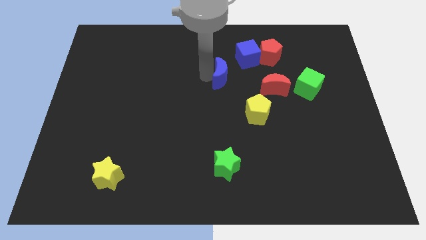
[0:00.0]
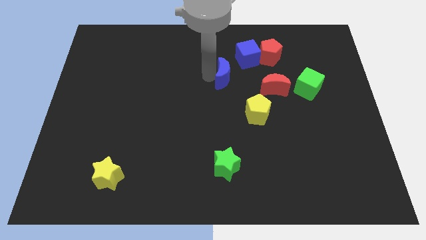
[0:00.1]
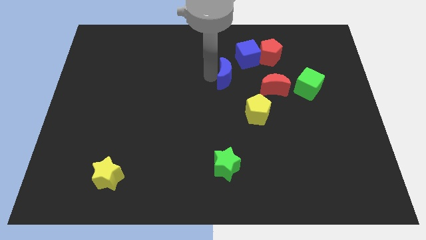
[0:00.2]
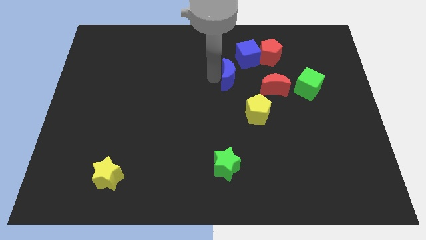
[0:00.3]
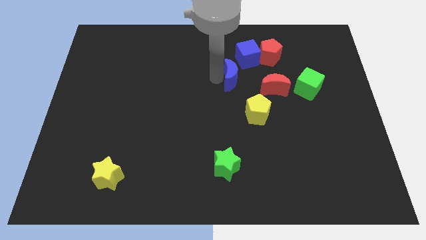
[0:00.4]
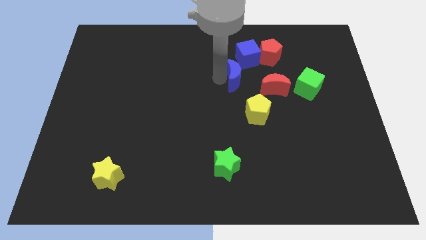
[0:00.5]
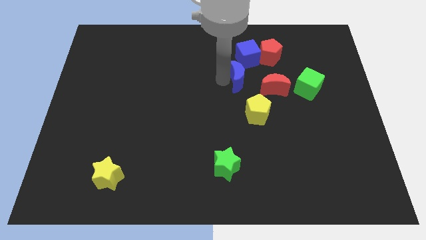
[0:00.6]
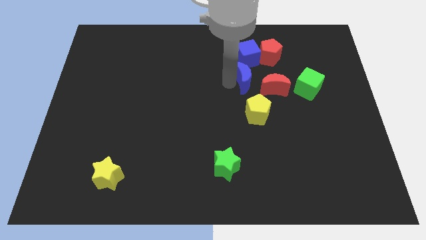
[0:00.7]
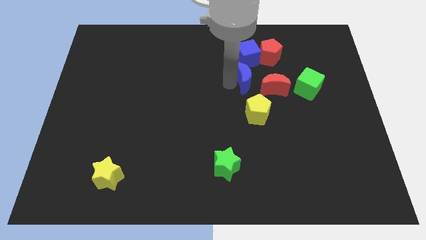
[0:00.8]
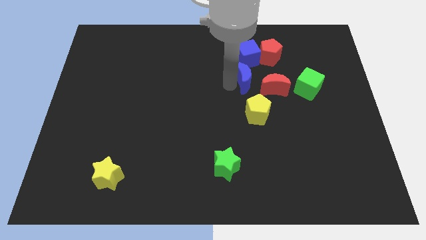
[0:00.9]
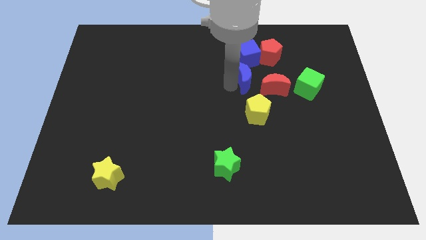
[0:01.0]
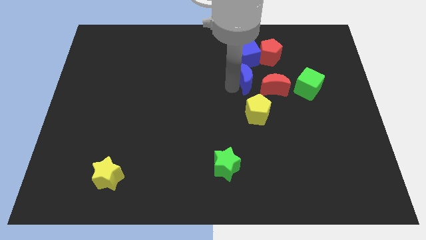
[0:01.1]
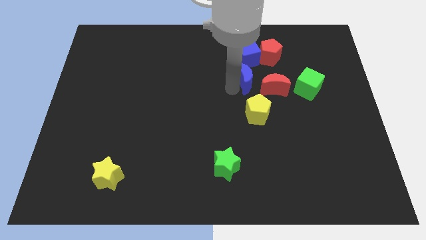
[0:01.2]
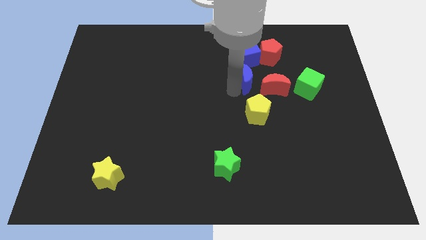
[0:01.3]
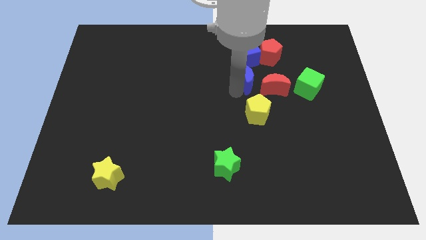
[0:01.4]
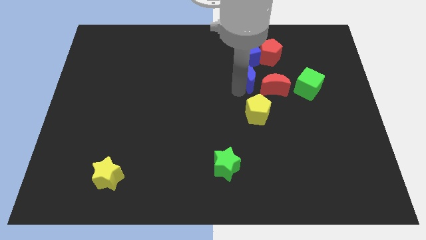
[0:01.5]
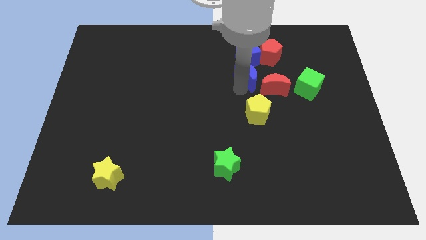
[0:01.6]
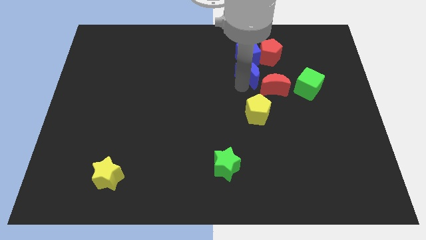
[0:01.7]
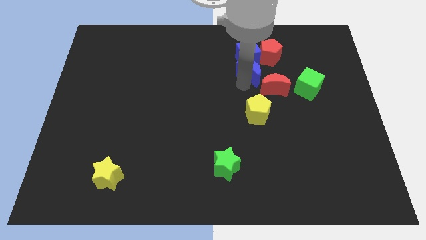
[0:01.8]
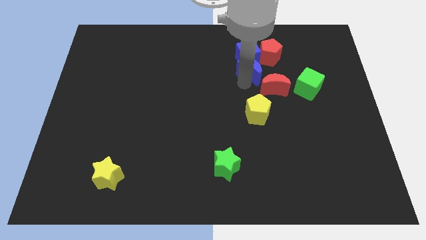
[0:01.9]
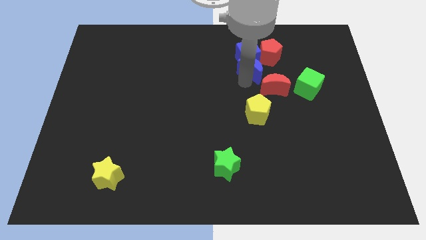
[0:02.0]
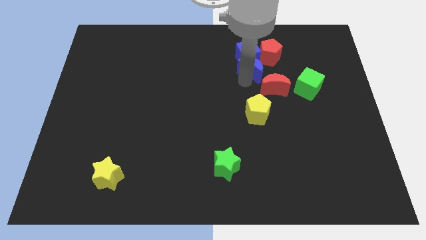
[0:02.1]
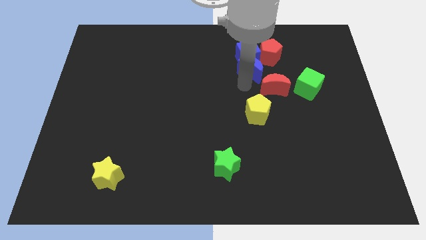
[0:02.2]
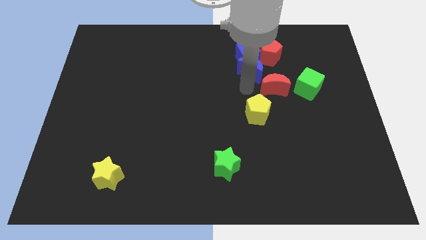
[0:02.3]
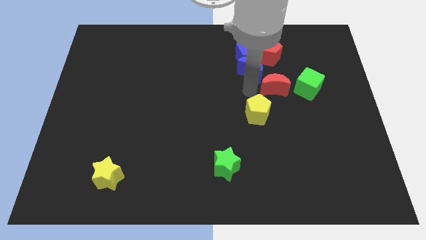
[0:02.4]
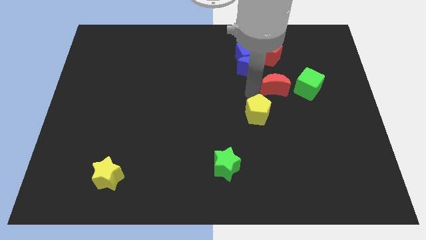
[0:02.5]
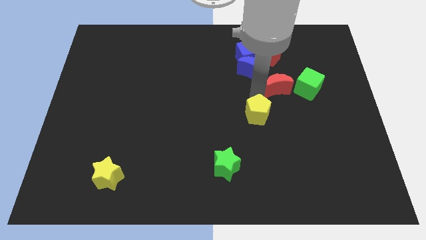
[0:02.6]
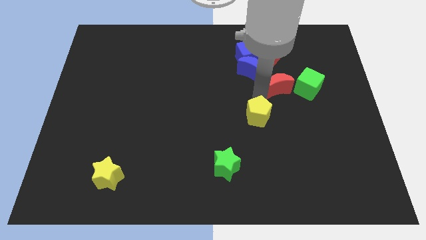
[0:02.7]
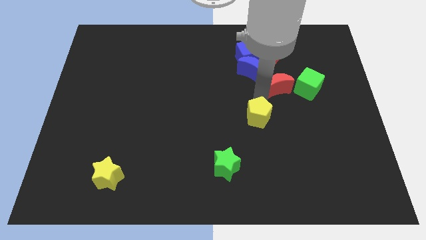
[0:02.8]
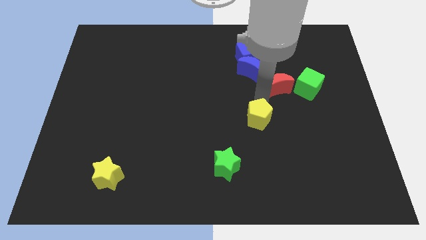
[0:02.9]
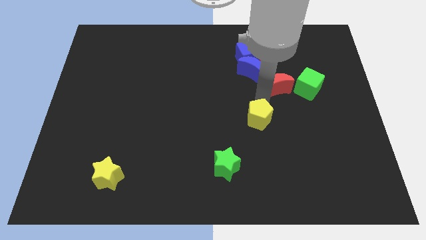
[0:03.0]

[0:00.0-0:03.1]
move blue crescent and red crescent slightly towards top

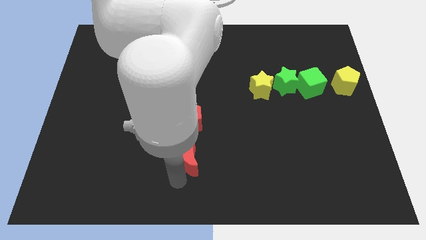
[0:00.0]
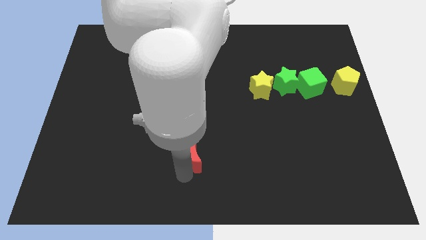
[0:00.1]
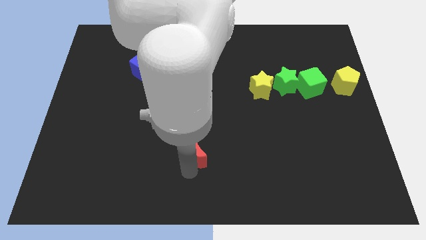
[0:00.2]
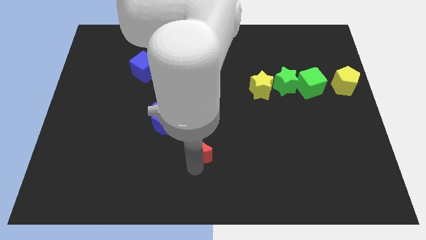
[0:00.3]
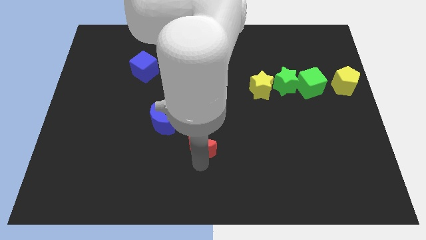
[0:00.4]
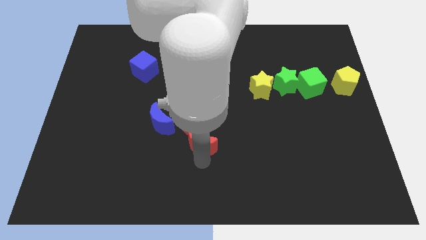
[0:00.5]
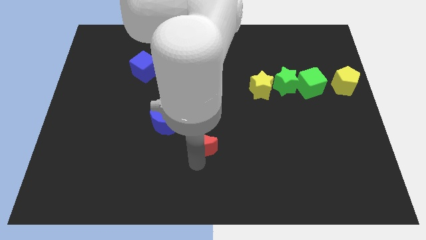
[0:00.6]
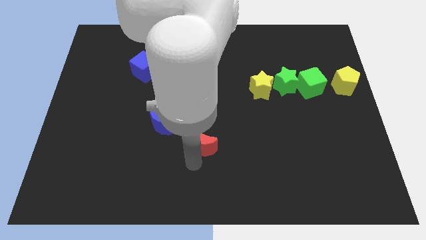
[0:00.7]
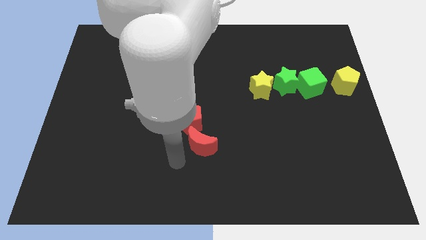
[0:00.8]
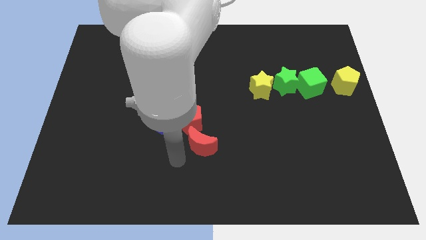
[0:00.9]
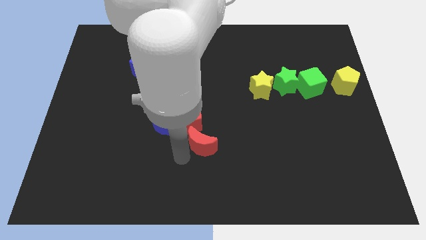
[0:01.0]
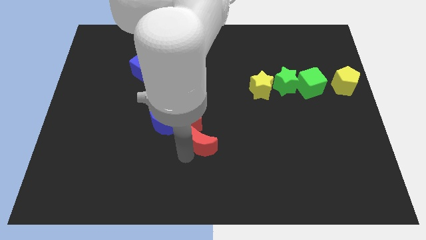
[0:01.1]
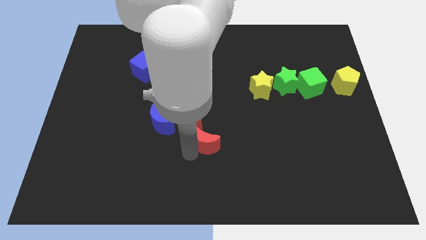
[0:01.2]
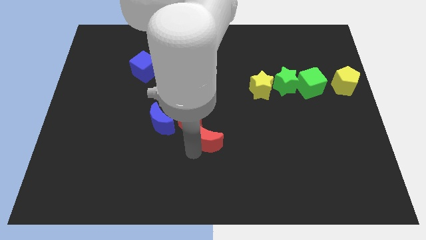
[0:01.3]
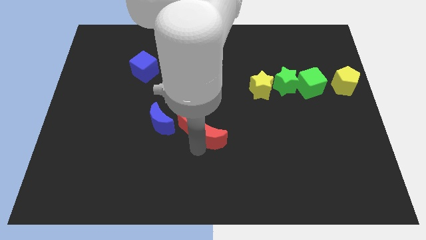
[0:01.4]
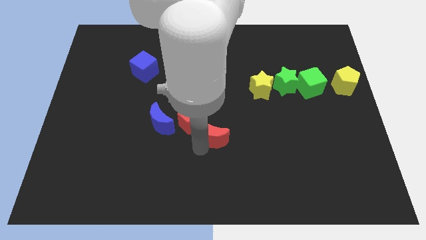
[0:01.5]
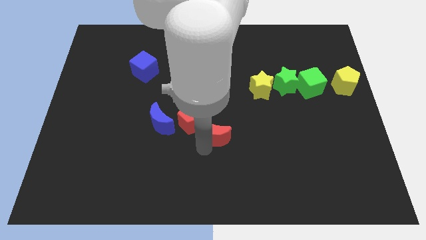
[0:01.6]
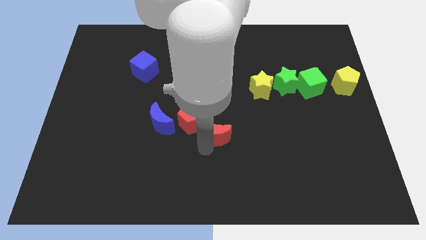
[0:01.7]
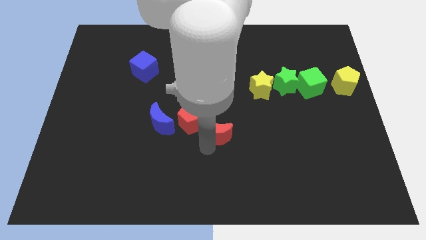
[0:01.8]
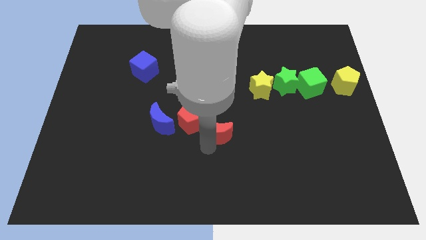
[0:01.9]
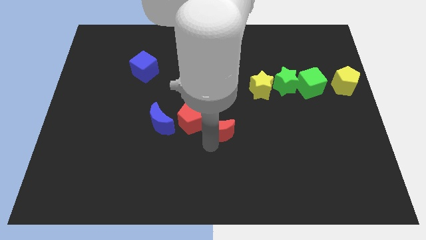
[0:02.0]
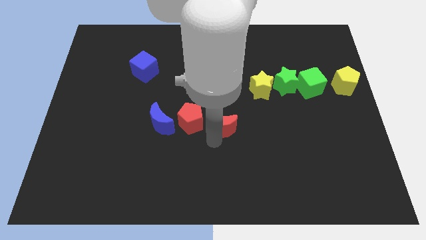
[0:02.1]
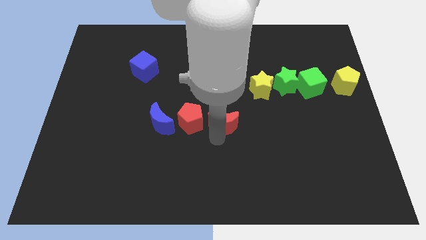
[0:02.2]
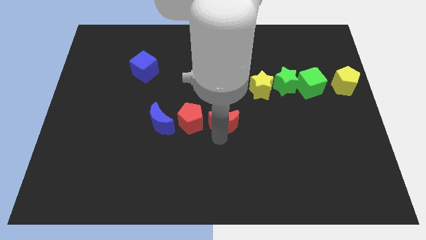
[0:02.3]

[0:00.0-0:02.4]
push red moon beside red pentagon

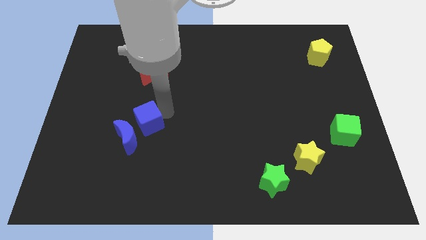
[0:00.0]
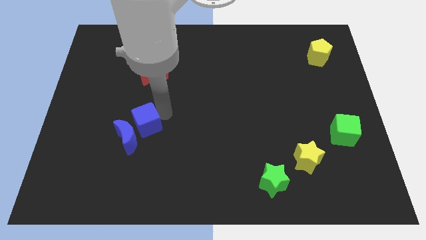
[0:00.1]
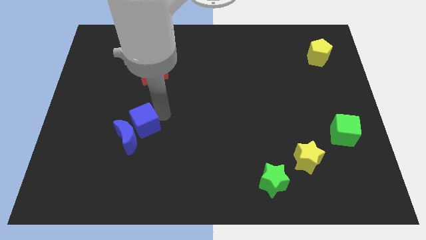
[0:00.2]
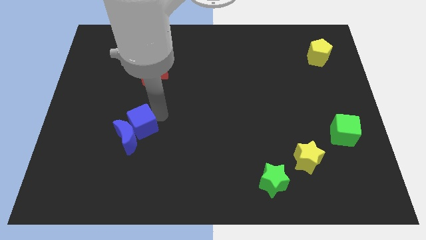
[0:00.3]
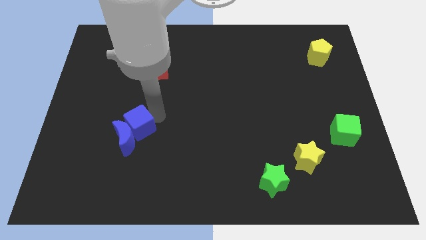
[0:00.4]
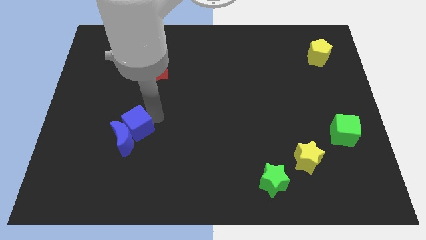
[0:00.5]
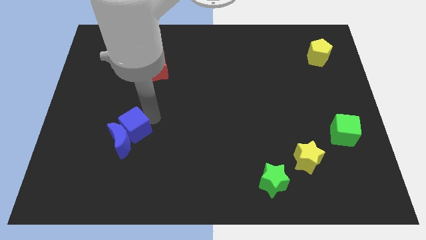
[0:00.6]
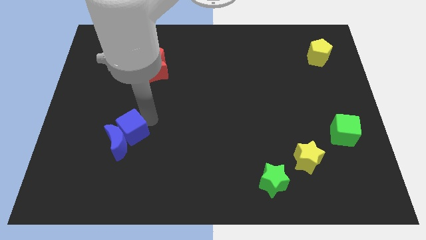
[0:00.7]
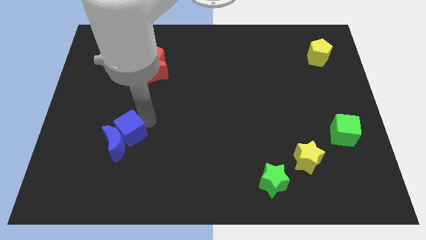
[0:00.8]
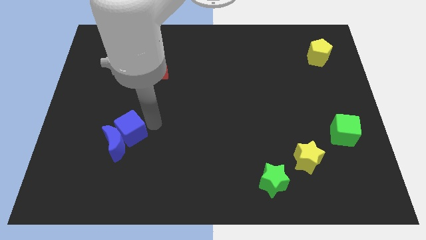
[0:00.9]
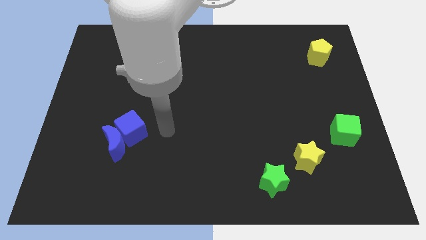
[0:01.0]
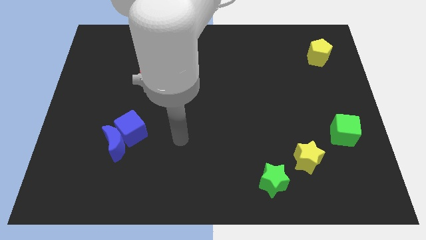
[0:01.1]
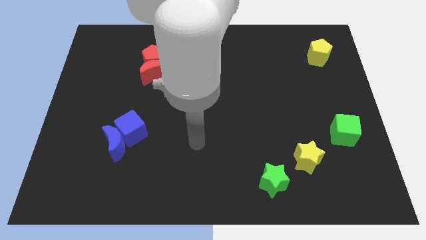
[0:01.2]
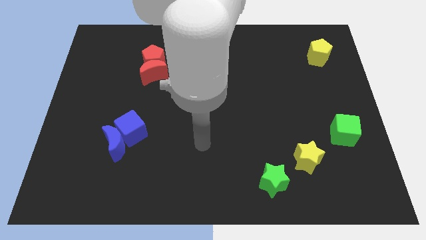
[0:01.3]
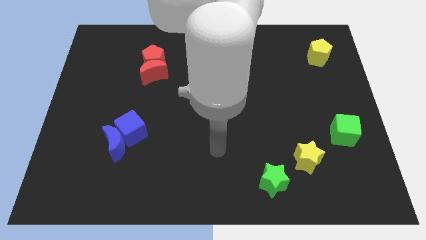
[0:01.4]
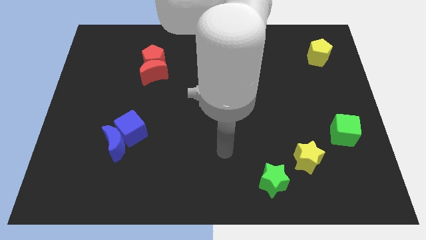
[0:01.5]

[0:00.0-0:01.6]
push the blue moon with the blue cube

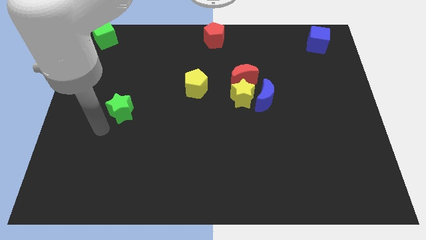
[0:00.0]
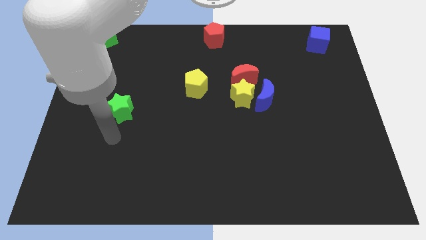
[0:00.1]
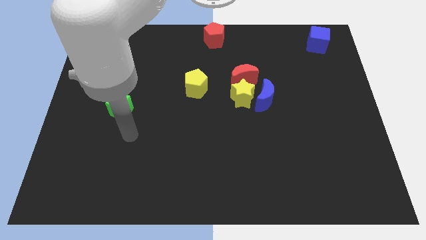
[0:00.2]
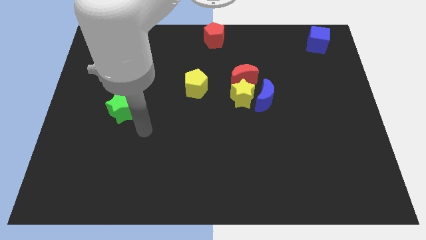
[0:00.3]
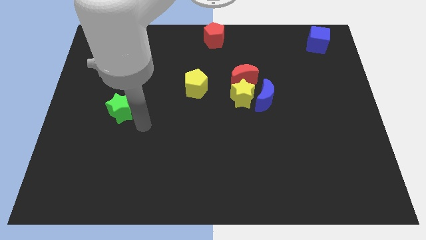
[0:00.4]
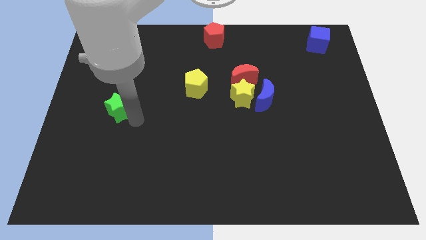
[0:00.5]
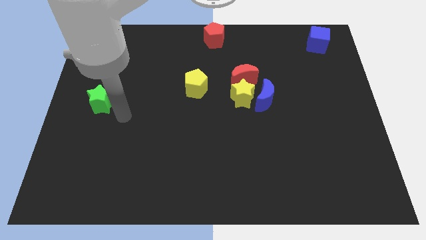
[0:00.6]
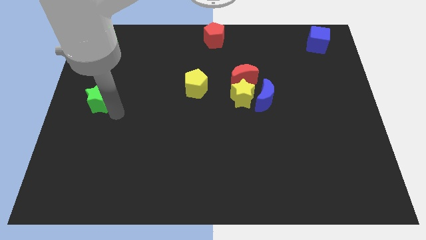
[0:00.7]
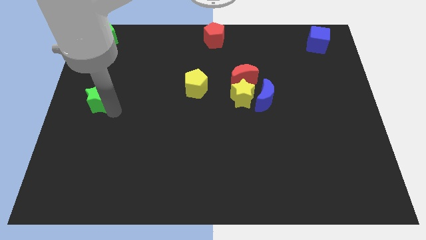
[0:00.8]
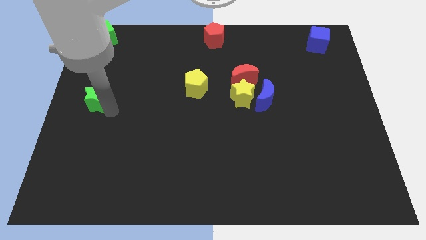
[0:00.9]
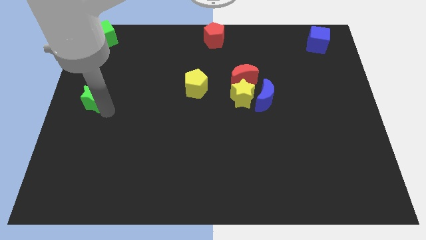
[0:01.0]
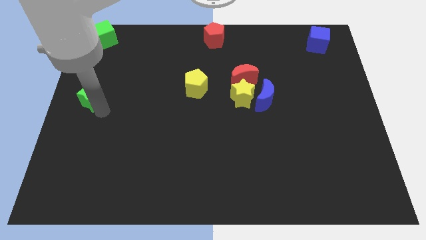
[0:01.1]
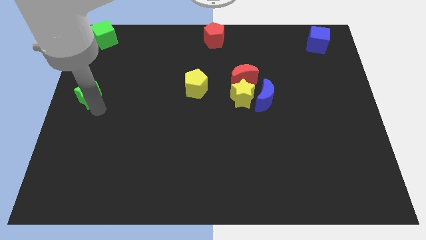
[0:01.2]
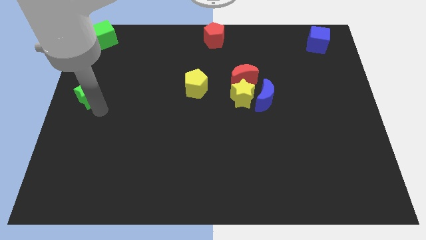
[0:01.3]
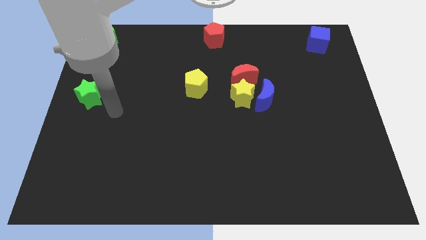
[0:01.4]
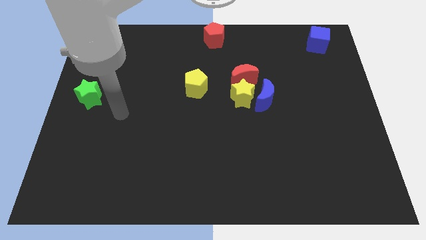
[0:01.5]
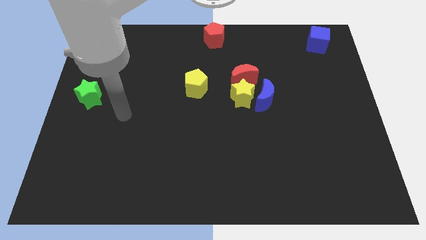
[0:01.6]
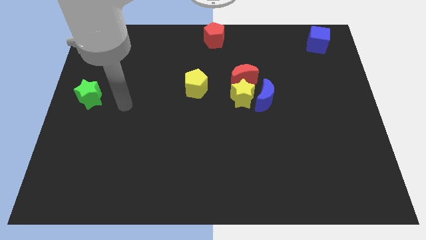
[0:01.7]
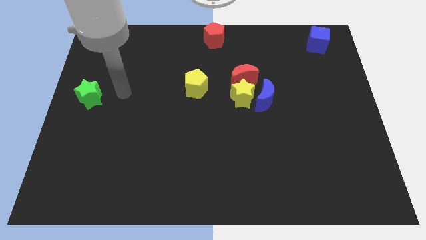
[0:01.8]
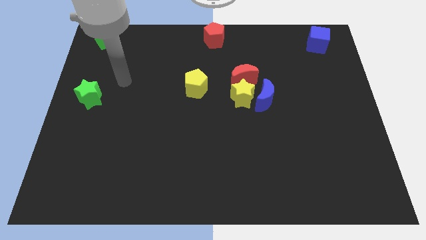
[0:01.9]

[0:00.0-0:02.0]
place the green star vertically to the green cube
